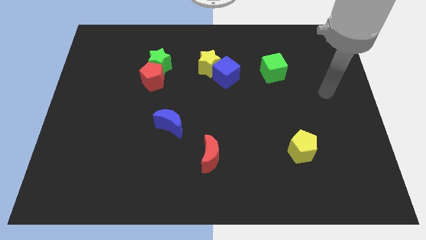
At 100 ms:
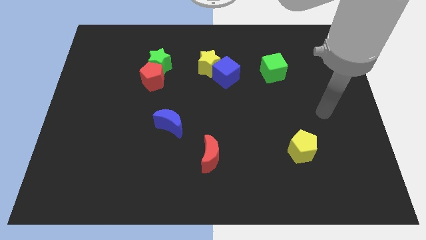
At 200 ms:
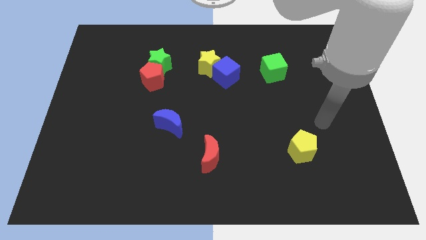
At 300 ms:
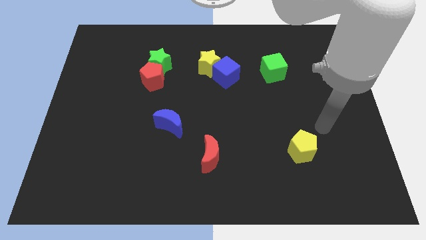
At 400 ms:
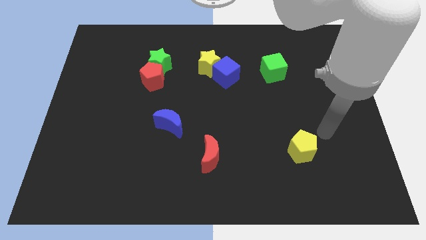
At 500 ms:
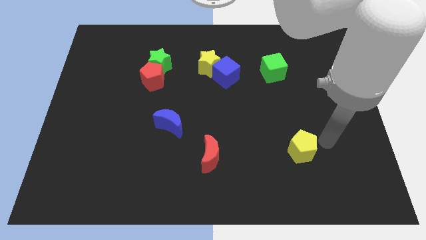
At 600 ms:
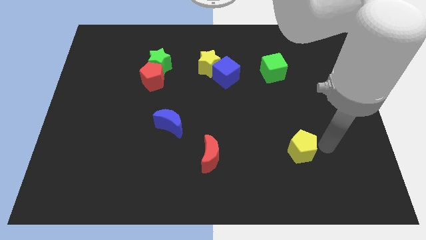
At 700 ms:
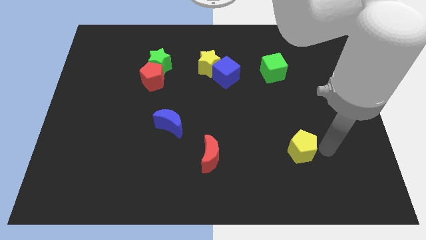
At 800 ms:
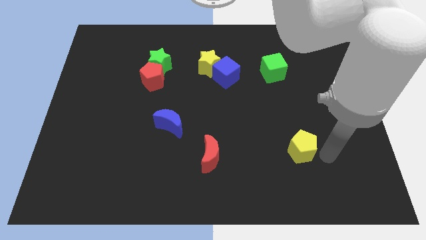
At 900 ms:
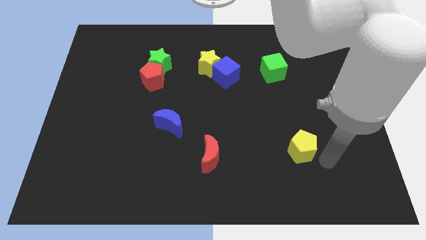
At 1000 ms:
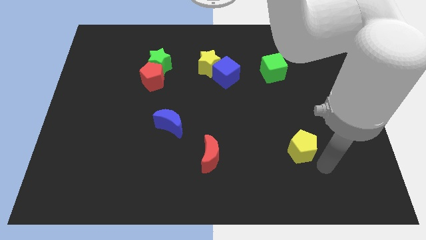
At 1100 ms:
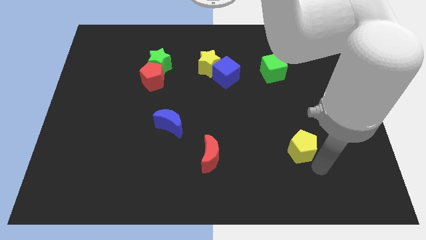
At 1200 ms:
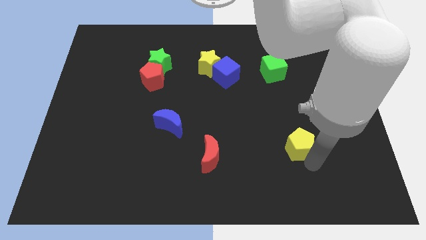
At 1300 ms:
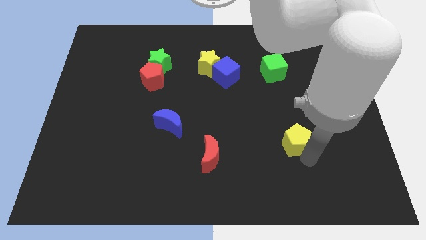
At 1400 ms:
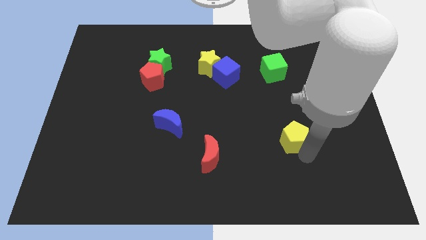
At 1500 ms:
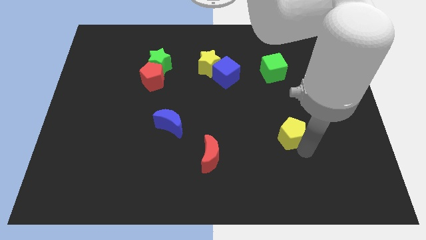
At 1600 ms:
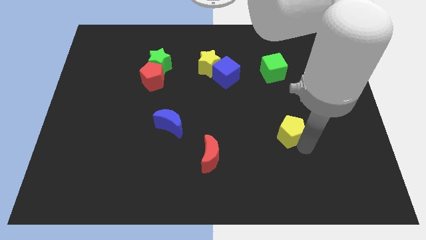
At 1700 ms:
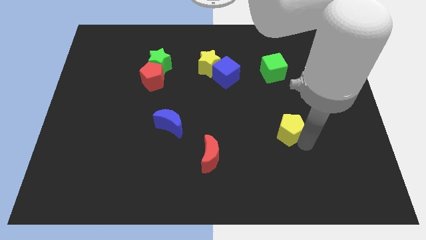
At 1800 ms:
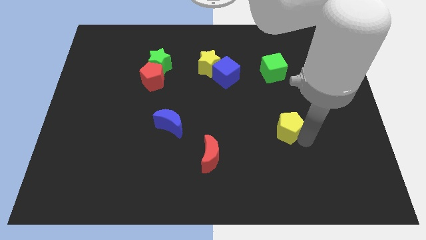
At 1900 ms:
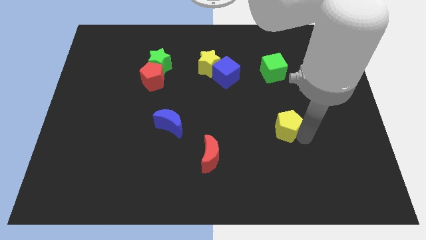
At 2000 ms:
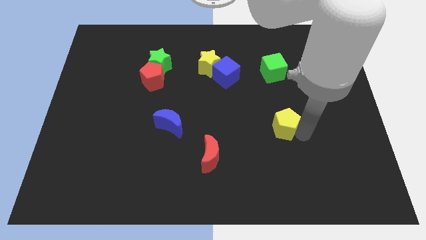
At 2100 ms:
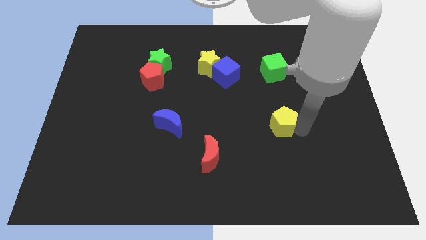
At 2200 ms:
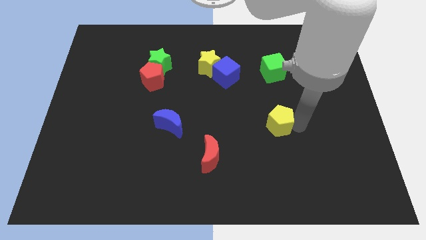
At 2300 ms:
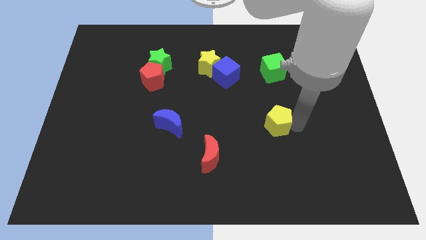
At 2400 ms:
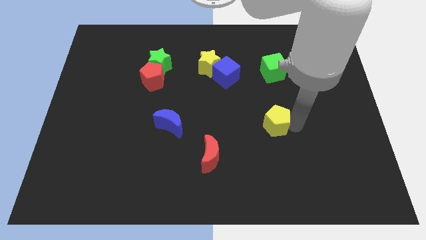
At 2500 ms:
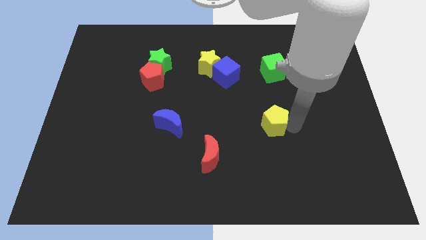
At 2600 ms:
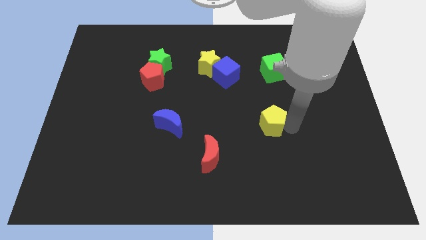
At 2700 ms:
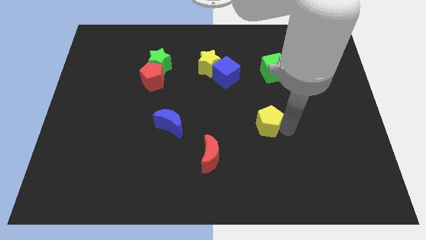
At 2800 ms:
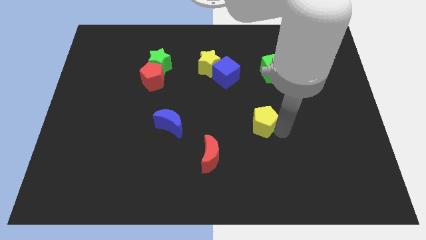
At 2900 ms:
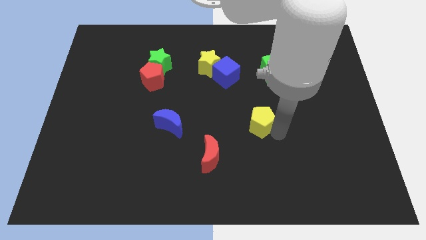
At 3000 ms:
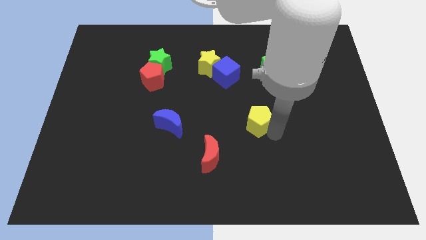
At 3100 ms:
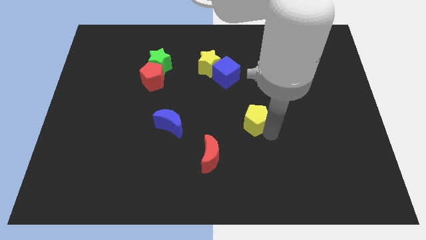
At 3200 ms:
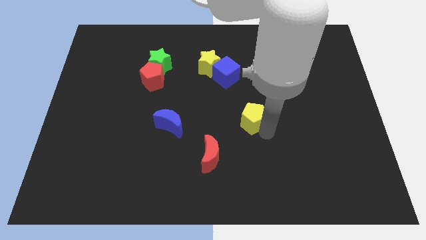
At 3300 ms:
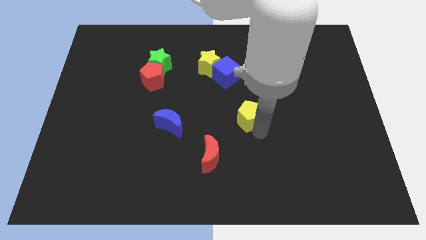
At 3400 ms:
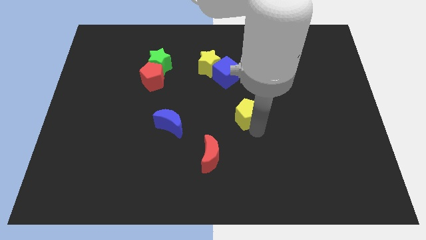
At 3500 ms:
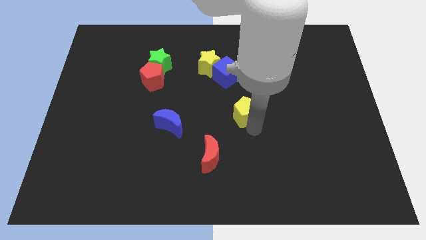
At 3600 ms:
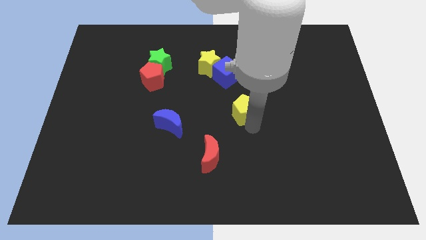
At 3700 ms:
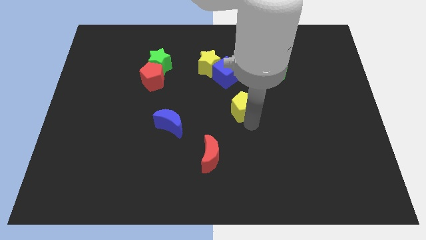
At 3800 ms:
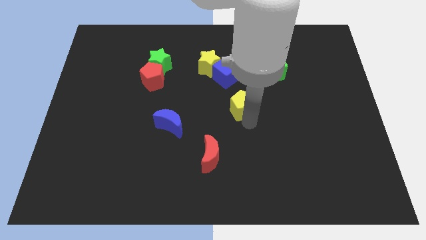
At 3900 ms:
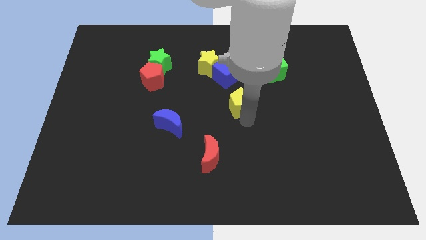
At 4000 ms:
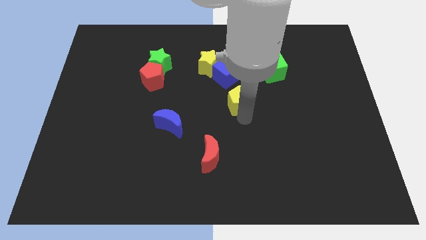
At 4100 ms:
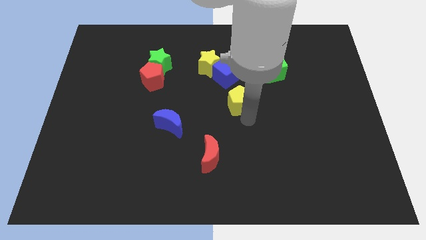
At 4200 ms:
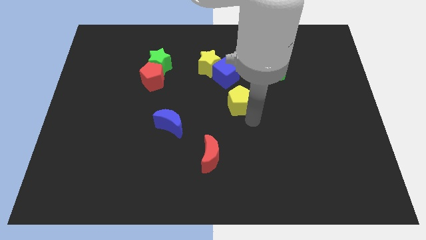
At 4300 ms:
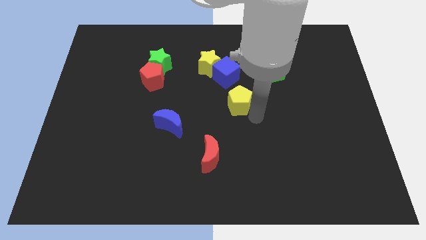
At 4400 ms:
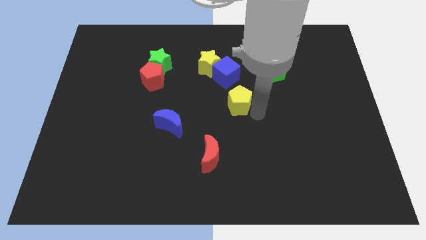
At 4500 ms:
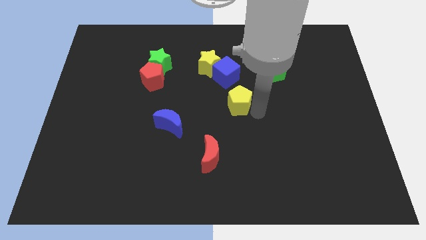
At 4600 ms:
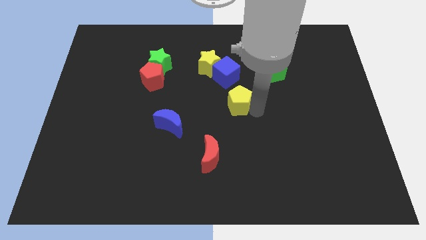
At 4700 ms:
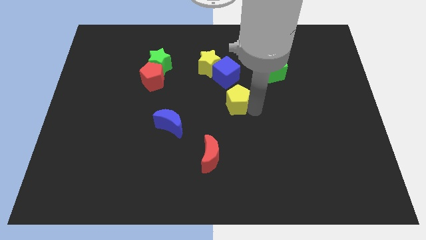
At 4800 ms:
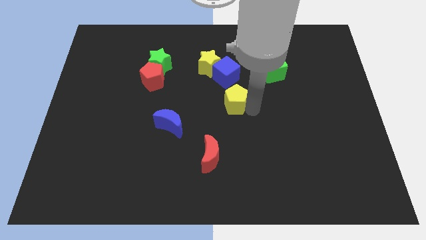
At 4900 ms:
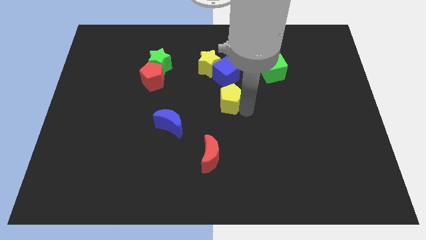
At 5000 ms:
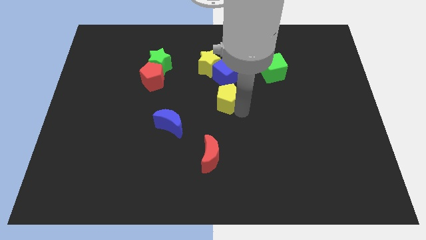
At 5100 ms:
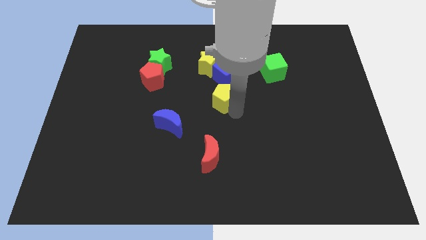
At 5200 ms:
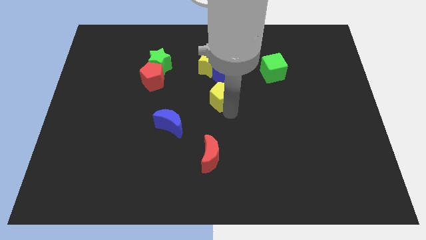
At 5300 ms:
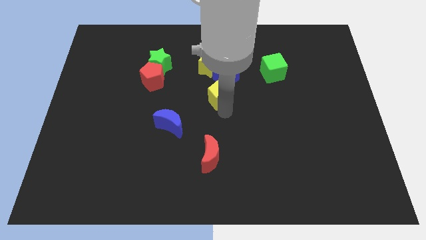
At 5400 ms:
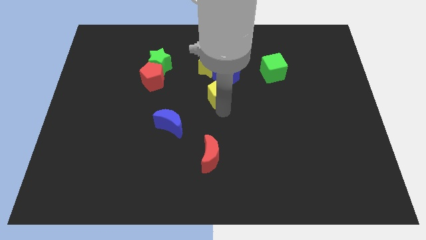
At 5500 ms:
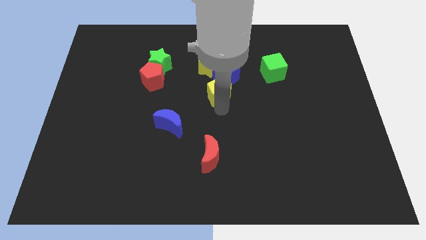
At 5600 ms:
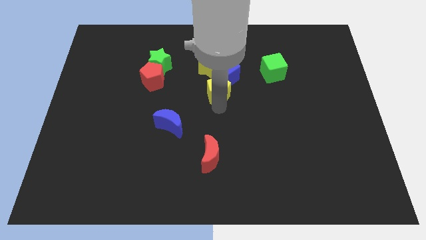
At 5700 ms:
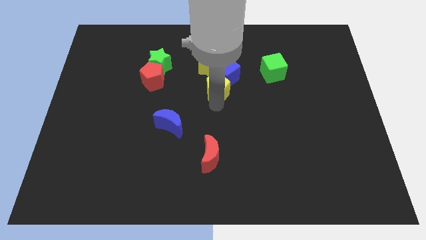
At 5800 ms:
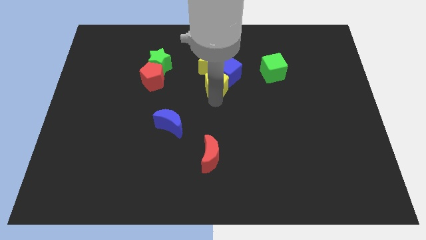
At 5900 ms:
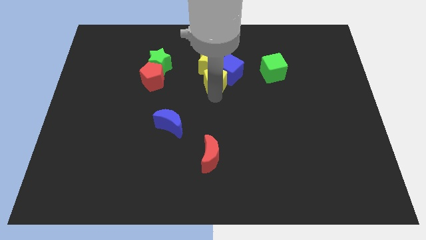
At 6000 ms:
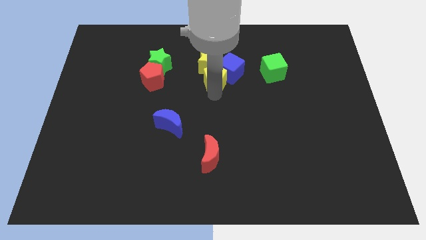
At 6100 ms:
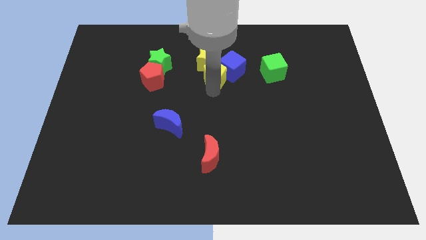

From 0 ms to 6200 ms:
put the yellow pentagon towards the yellow star

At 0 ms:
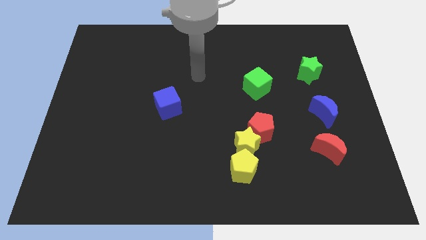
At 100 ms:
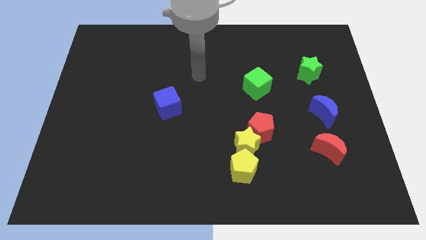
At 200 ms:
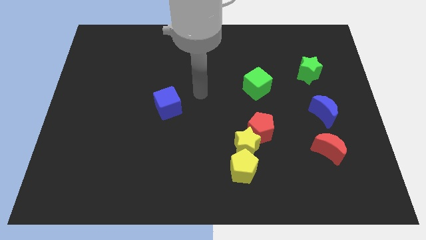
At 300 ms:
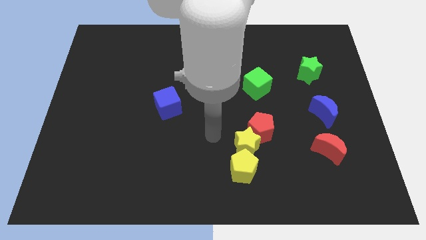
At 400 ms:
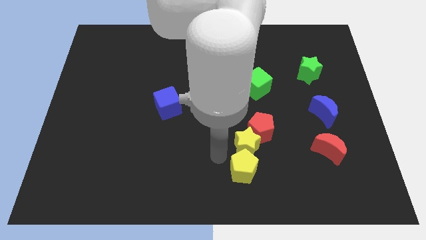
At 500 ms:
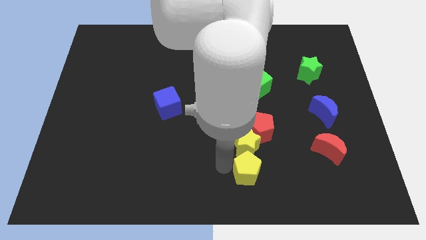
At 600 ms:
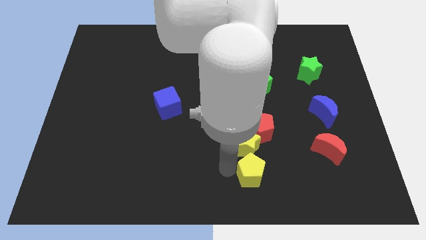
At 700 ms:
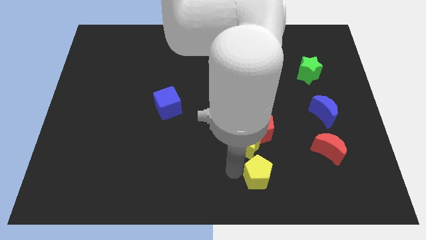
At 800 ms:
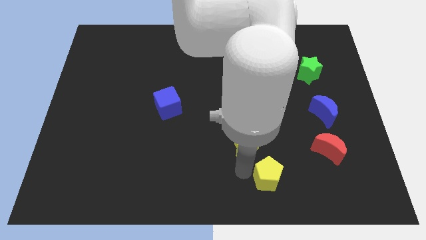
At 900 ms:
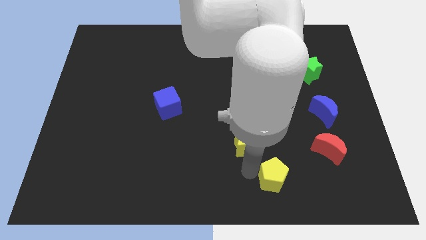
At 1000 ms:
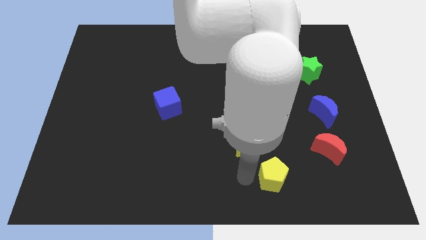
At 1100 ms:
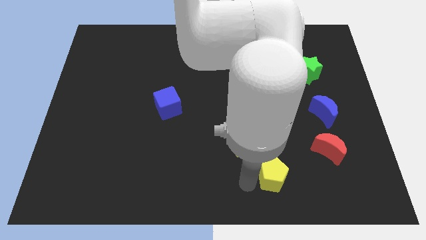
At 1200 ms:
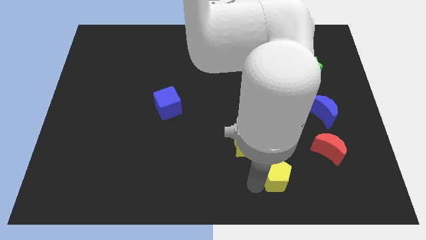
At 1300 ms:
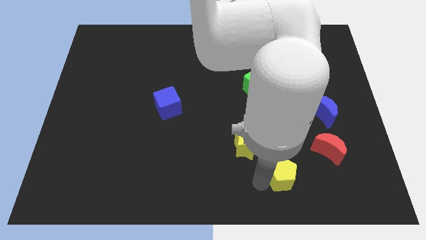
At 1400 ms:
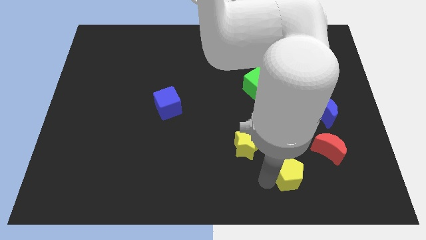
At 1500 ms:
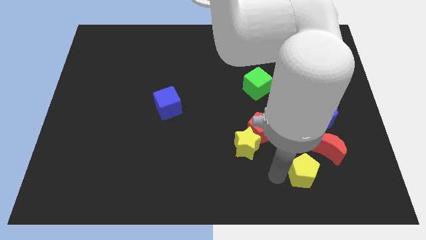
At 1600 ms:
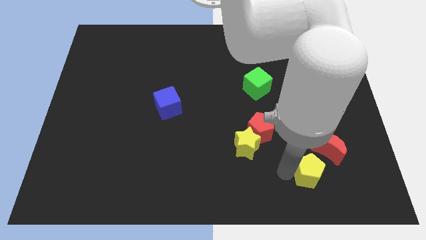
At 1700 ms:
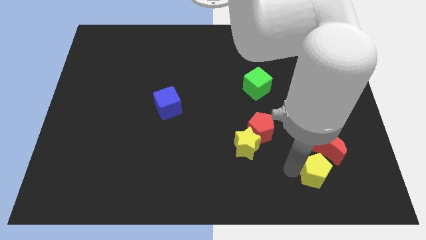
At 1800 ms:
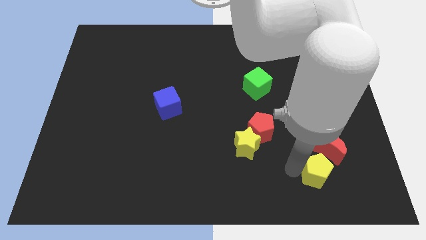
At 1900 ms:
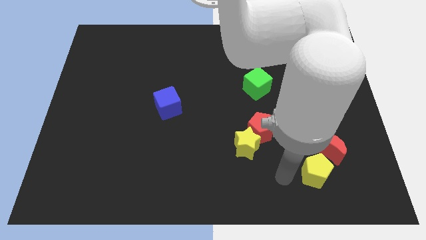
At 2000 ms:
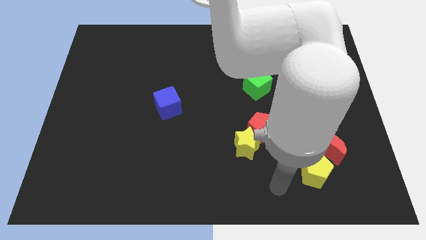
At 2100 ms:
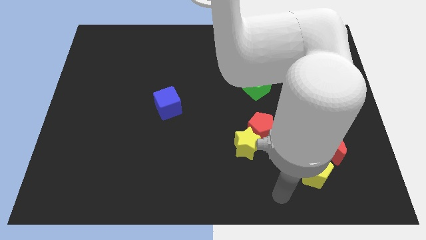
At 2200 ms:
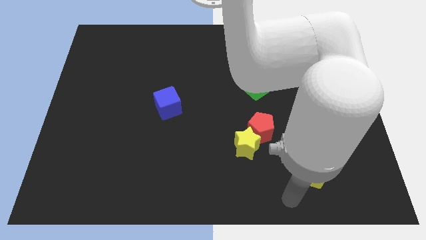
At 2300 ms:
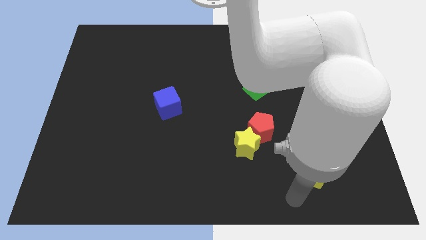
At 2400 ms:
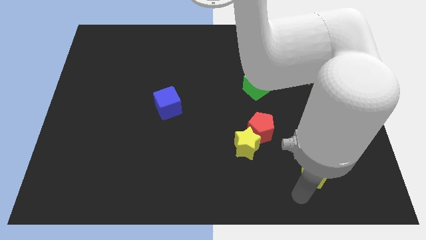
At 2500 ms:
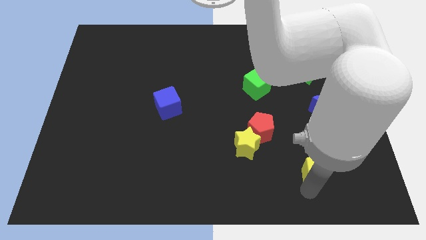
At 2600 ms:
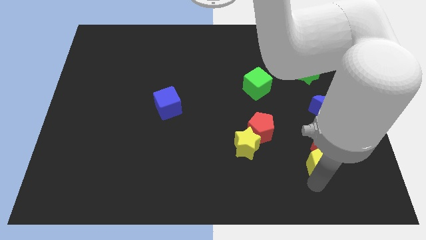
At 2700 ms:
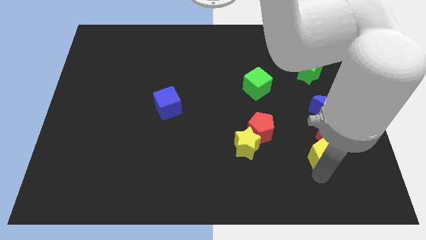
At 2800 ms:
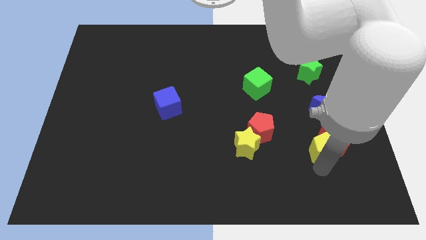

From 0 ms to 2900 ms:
move the yellow pentagon towards the red moon
